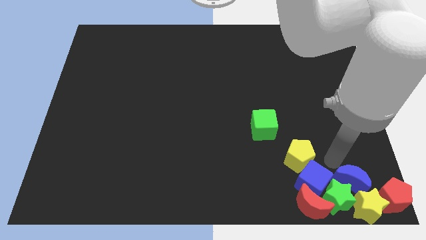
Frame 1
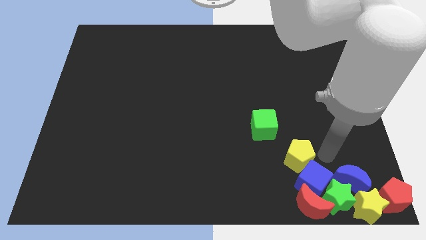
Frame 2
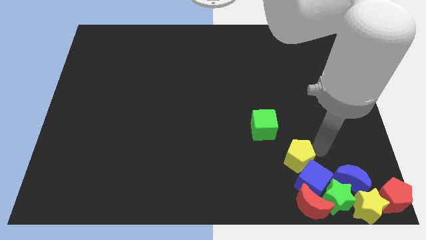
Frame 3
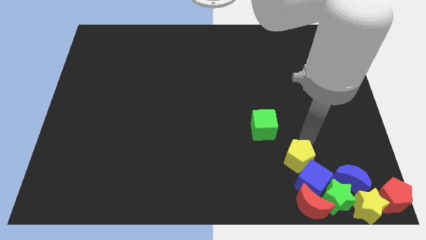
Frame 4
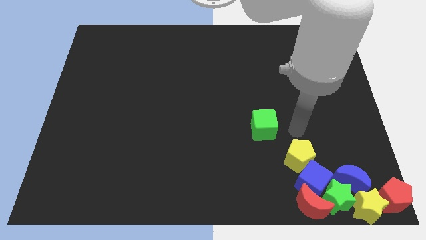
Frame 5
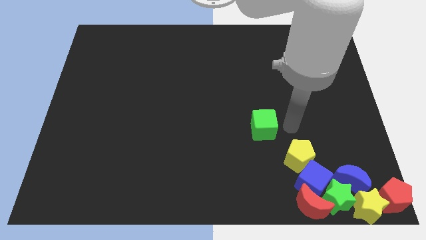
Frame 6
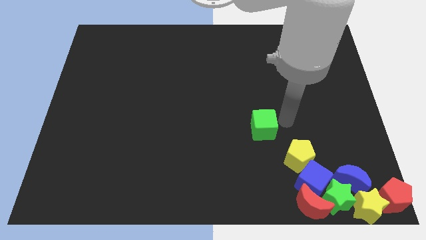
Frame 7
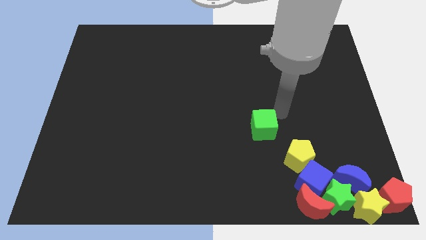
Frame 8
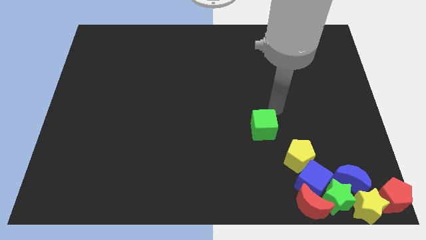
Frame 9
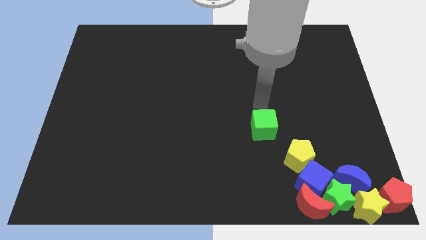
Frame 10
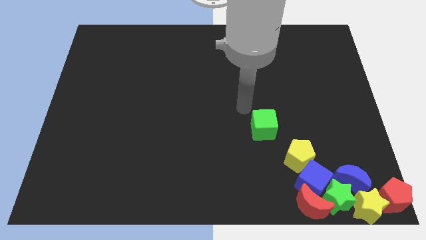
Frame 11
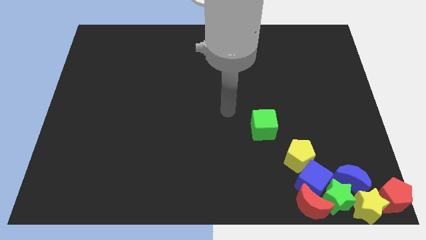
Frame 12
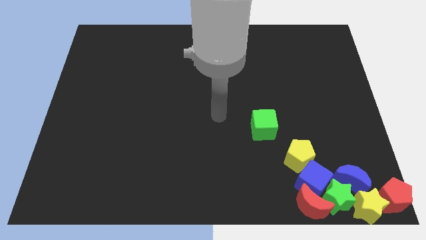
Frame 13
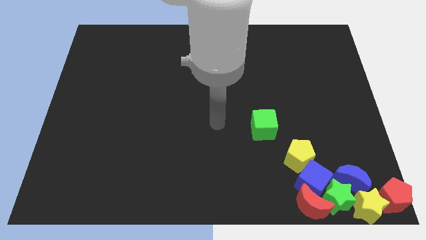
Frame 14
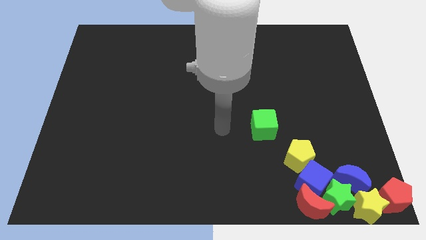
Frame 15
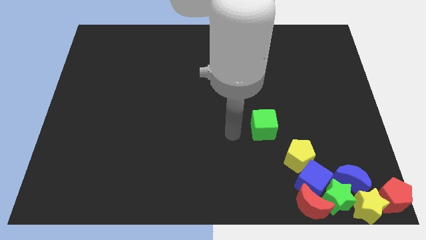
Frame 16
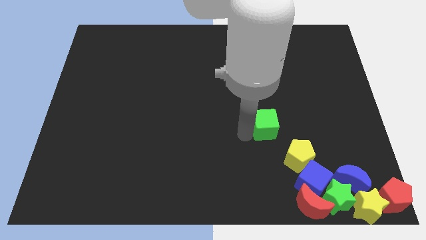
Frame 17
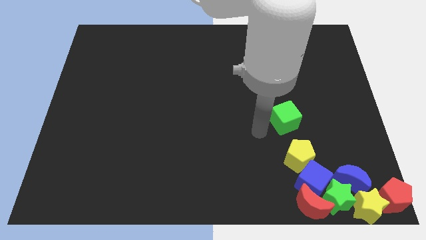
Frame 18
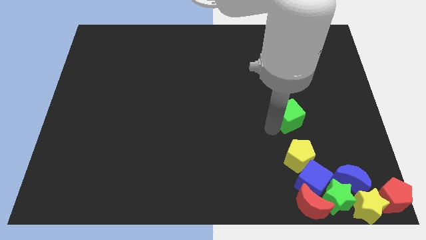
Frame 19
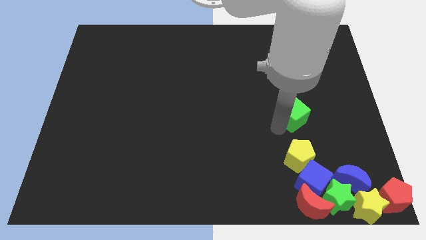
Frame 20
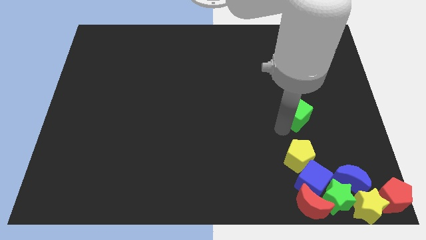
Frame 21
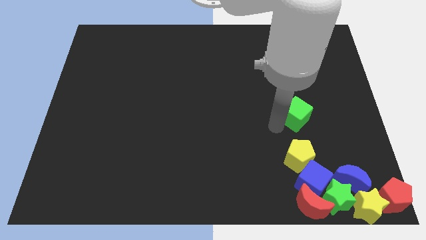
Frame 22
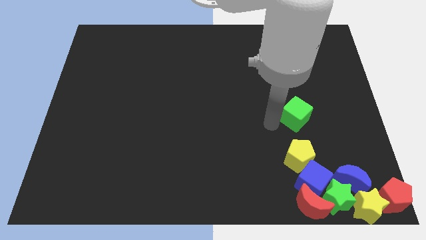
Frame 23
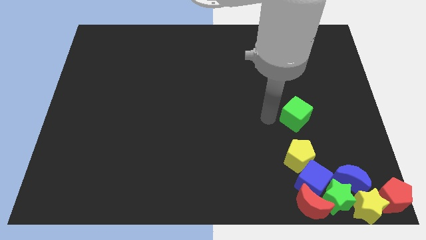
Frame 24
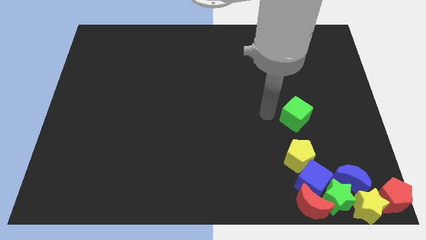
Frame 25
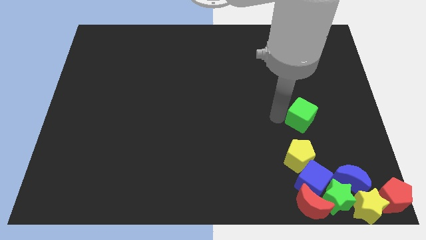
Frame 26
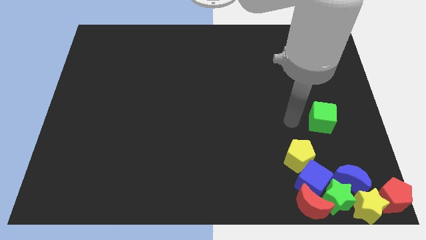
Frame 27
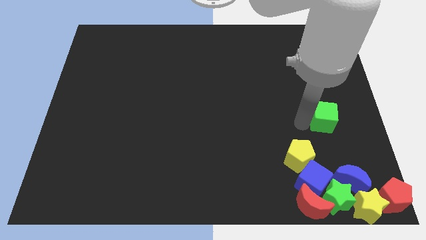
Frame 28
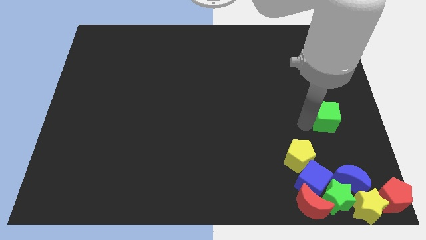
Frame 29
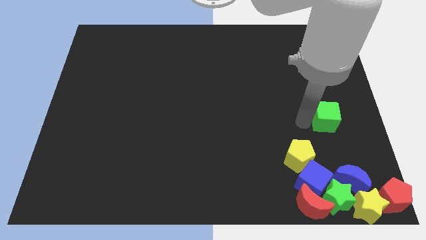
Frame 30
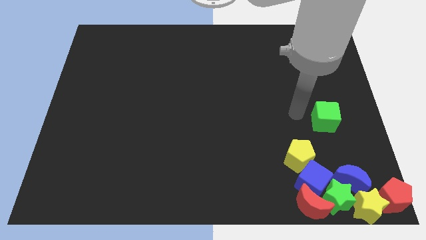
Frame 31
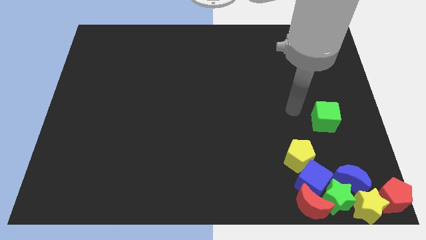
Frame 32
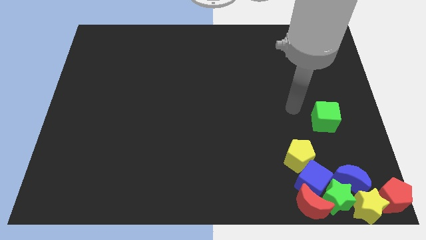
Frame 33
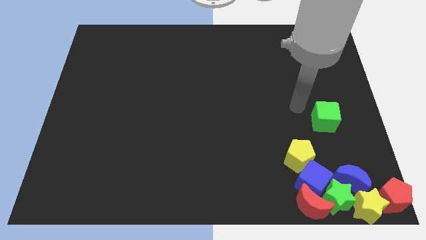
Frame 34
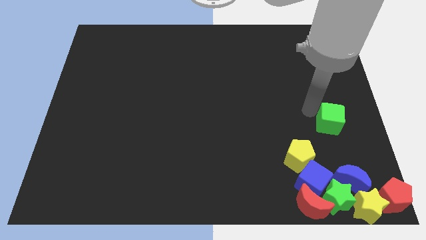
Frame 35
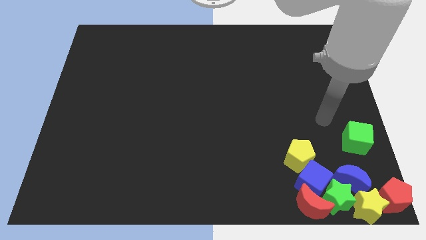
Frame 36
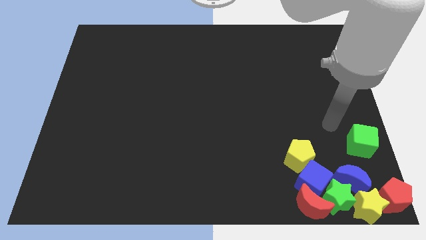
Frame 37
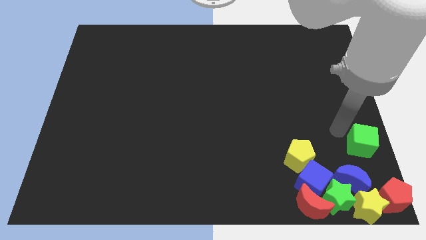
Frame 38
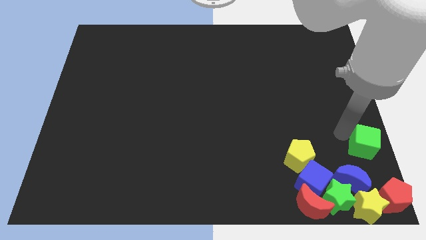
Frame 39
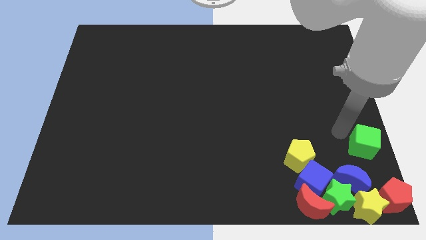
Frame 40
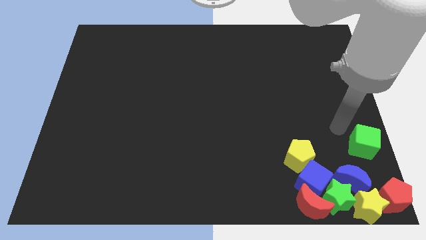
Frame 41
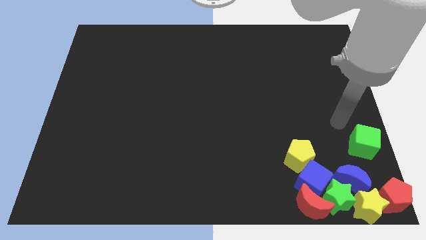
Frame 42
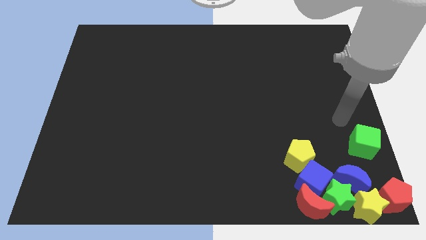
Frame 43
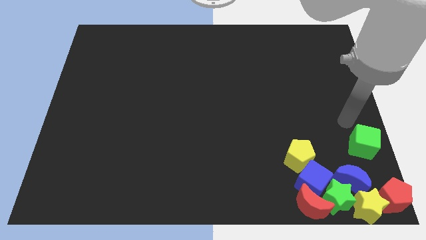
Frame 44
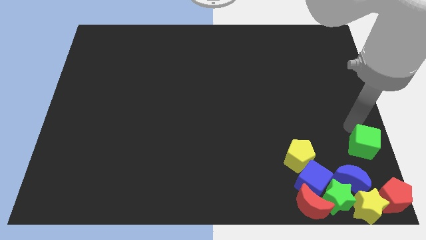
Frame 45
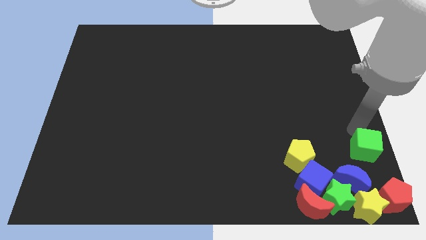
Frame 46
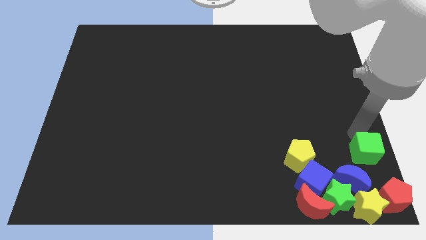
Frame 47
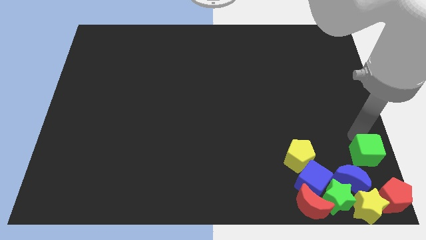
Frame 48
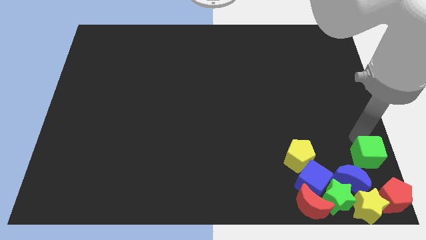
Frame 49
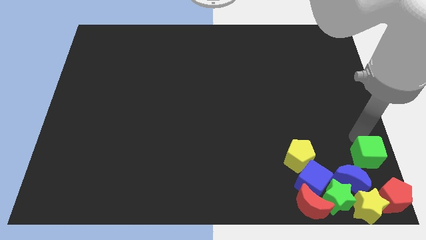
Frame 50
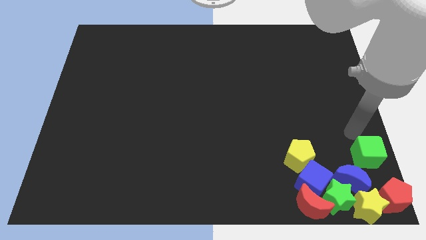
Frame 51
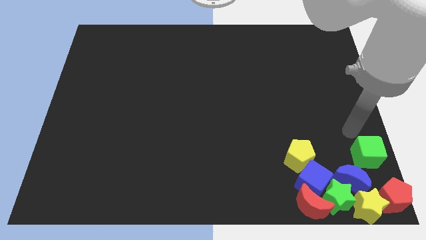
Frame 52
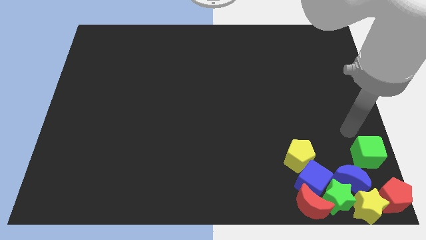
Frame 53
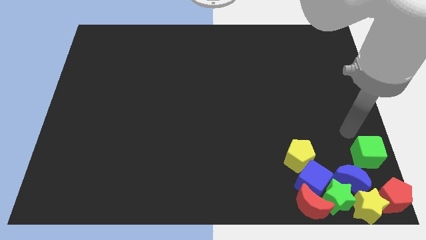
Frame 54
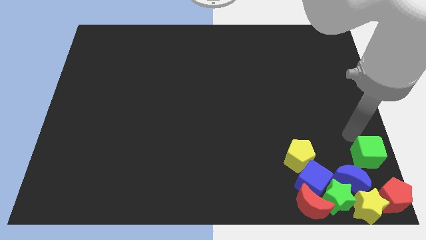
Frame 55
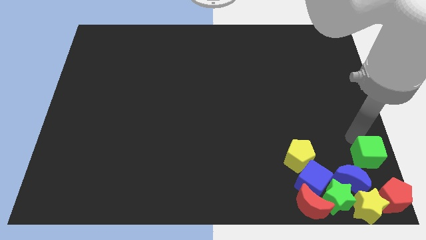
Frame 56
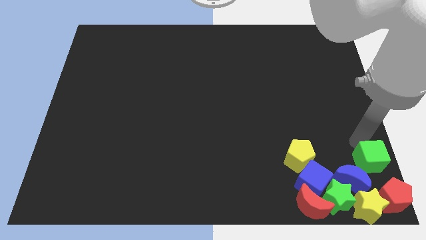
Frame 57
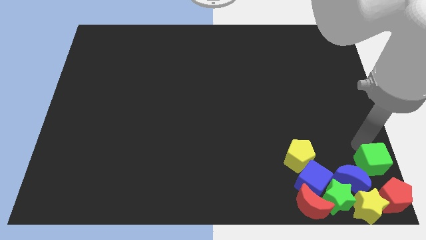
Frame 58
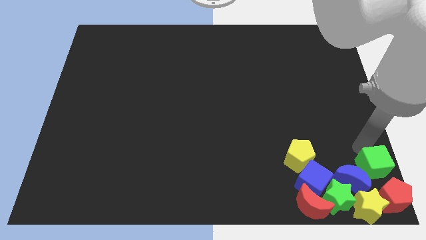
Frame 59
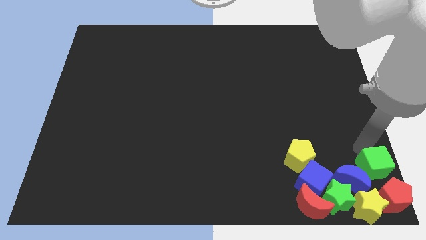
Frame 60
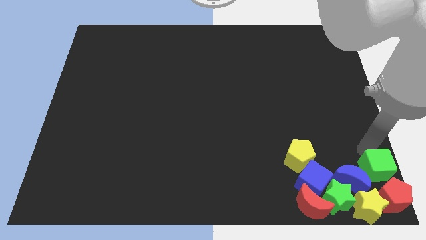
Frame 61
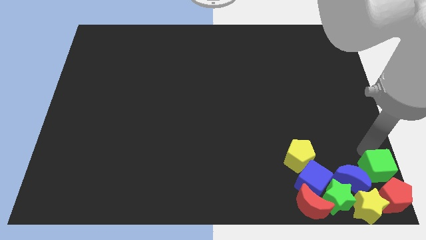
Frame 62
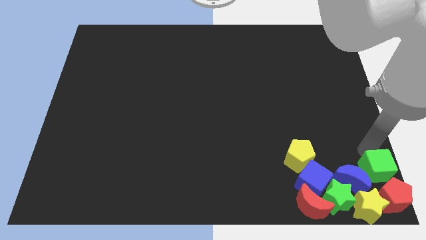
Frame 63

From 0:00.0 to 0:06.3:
move the green cube towards the red pentagon

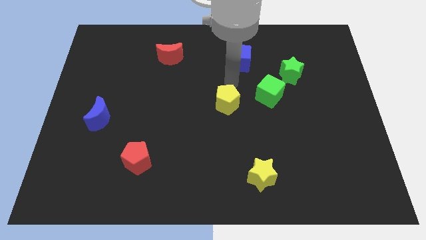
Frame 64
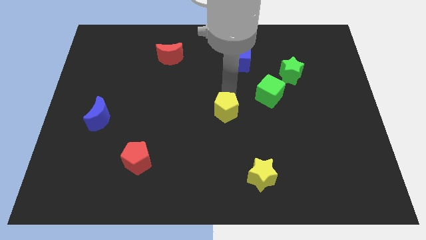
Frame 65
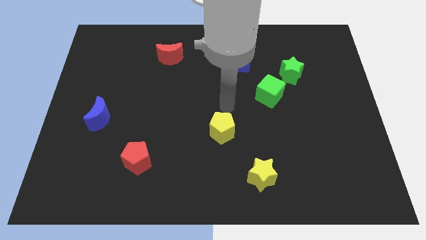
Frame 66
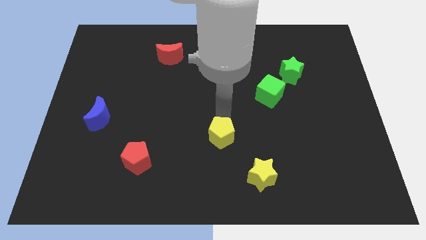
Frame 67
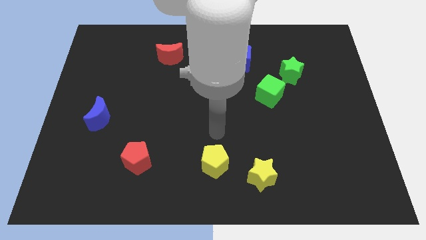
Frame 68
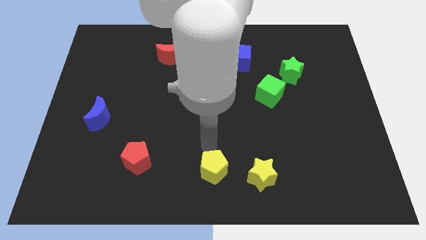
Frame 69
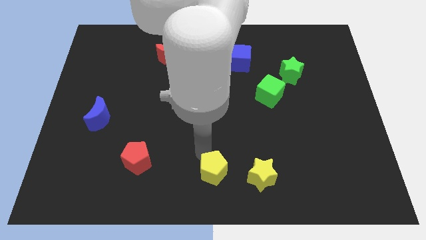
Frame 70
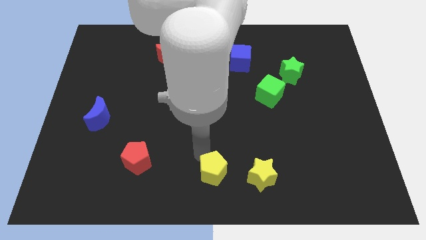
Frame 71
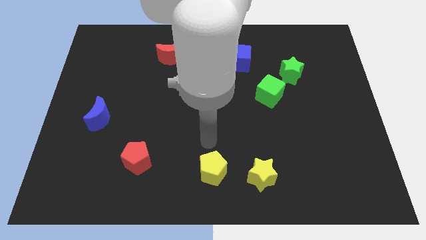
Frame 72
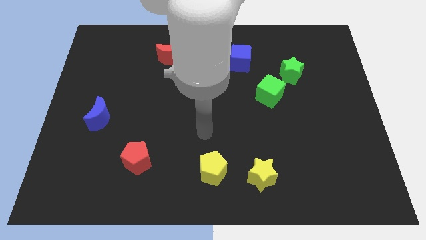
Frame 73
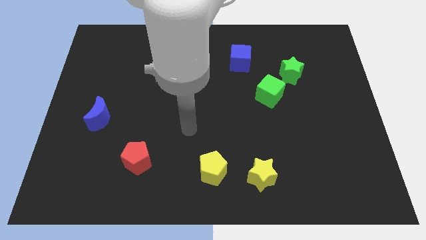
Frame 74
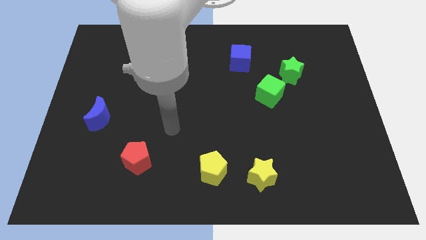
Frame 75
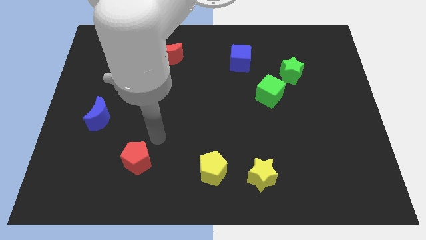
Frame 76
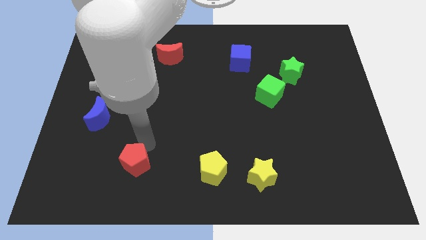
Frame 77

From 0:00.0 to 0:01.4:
push the yellow pentagon to the left of the yellow star

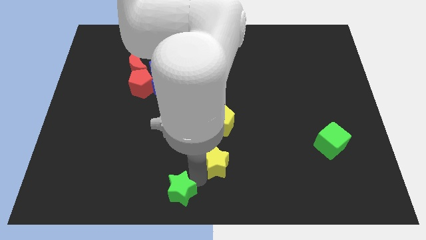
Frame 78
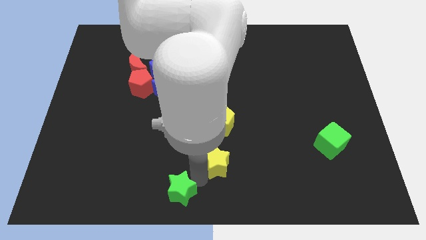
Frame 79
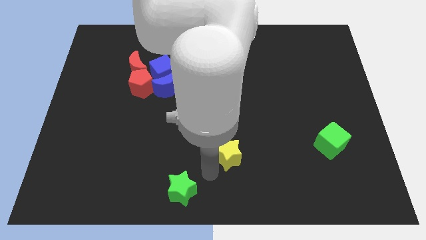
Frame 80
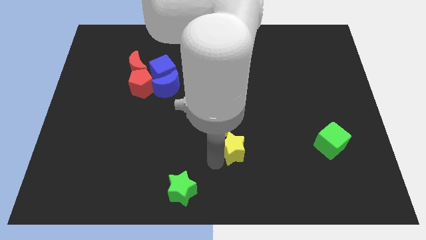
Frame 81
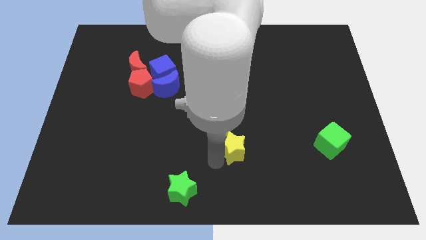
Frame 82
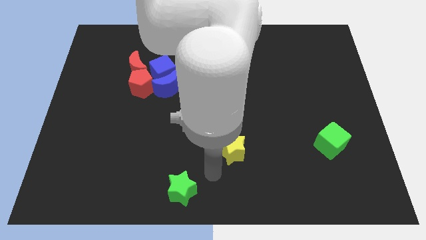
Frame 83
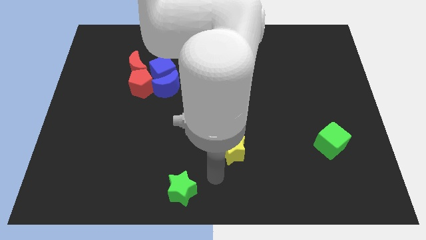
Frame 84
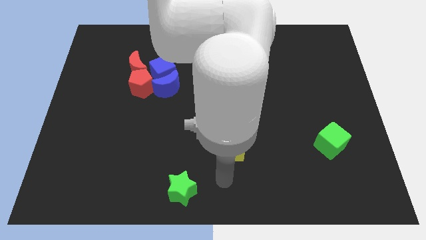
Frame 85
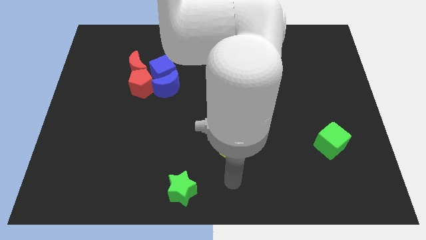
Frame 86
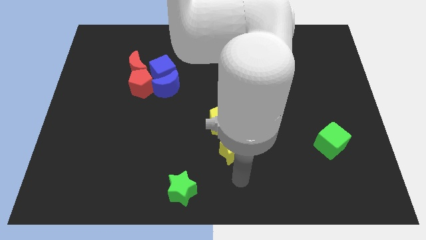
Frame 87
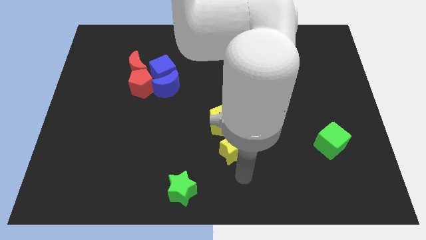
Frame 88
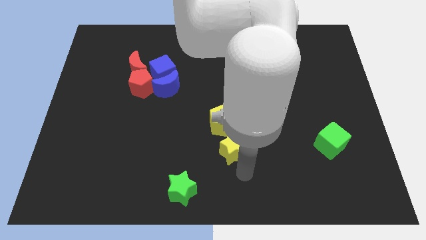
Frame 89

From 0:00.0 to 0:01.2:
slide the yellow star towards the yellow pentagon

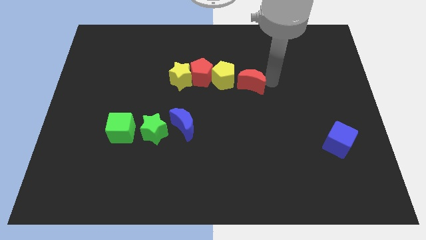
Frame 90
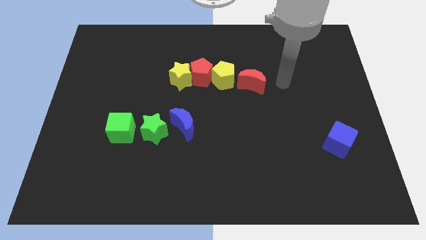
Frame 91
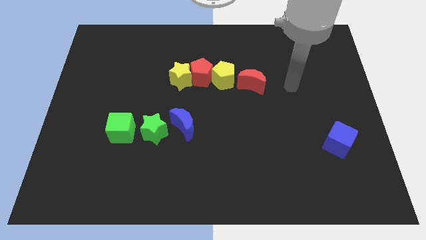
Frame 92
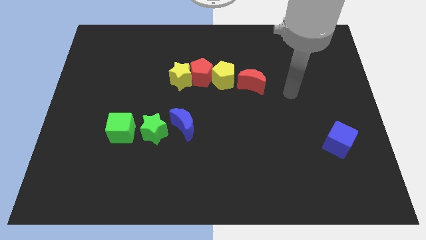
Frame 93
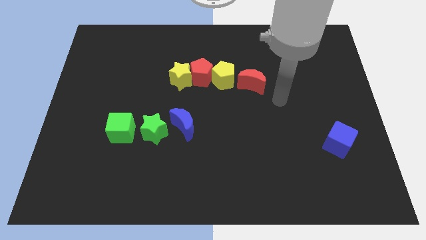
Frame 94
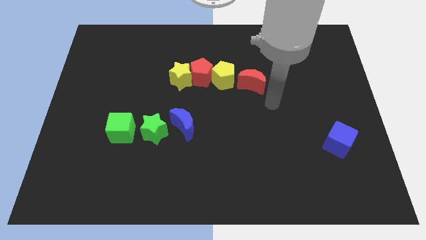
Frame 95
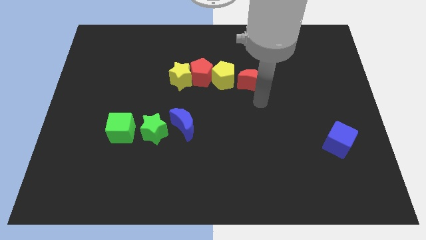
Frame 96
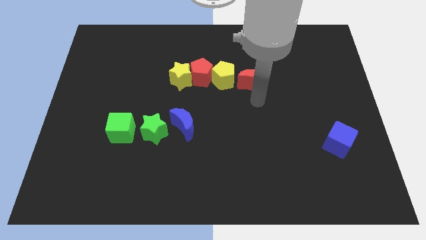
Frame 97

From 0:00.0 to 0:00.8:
point your arm at the bottom of the red crescent
